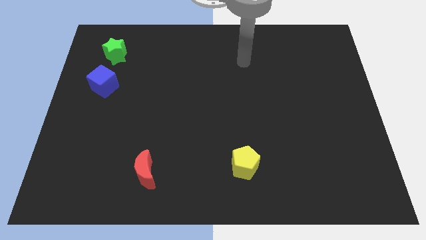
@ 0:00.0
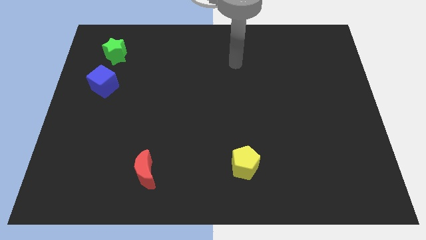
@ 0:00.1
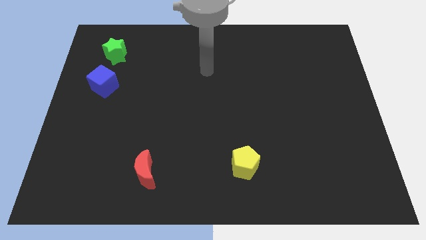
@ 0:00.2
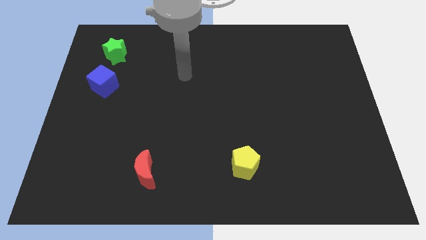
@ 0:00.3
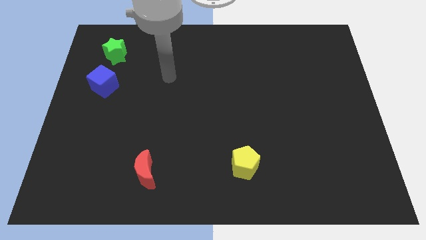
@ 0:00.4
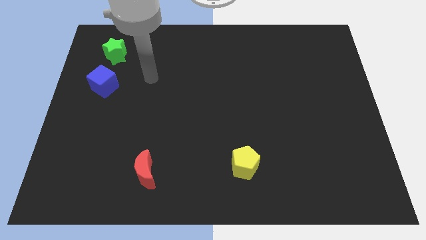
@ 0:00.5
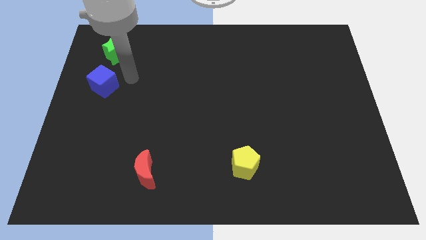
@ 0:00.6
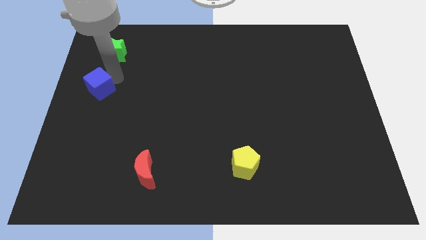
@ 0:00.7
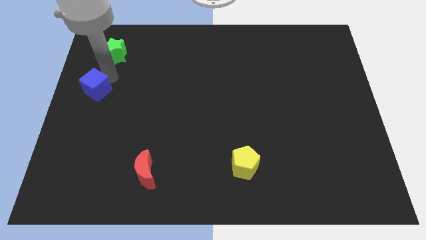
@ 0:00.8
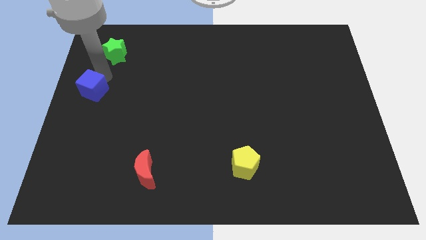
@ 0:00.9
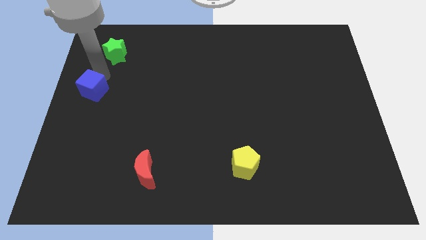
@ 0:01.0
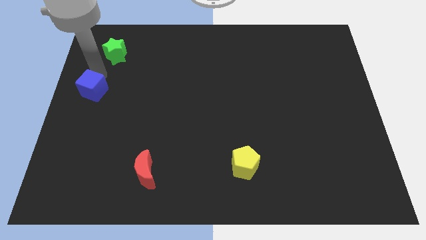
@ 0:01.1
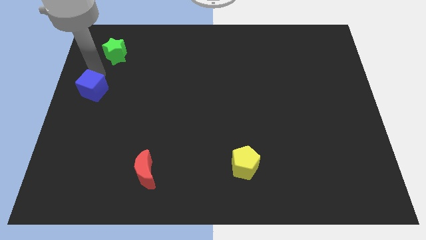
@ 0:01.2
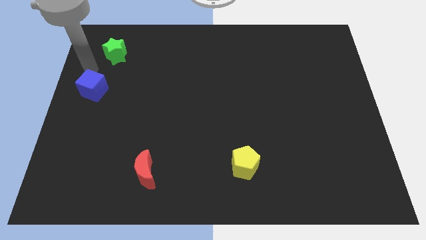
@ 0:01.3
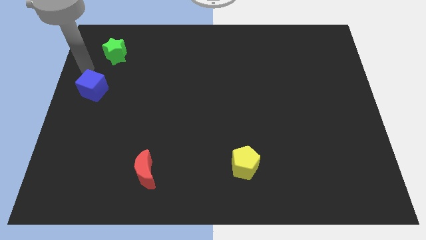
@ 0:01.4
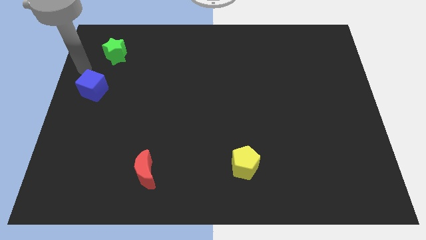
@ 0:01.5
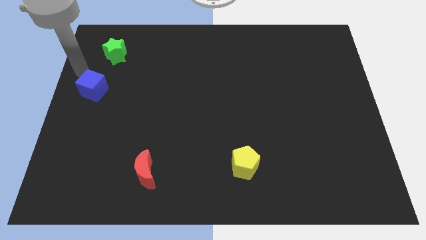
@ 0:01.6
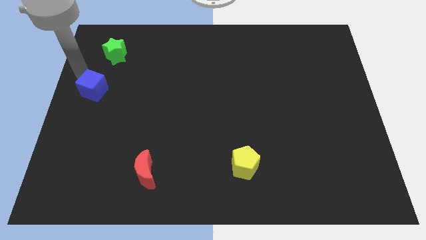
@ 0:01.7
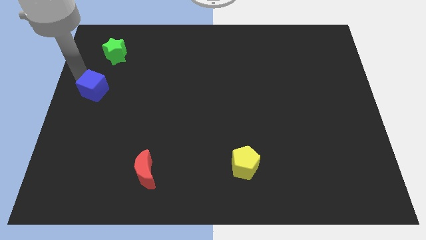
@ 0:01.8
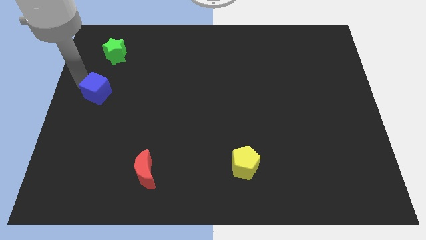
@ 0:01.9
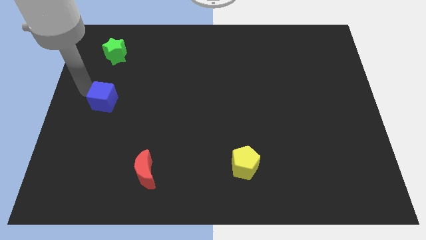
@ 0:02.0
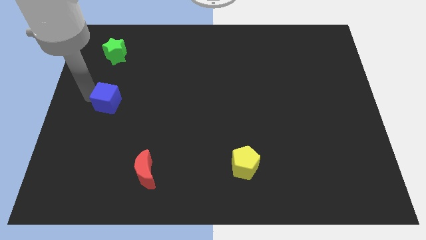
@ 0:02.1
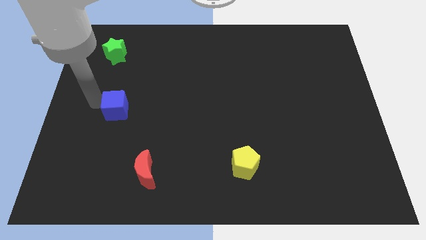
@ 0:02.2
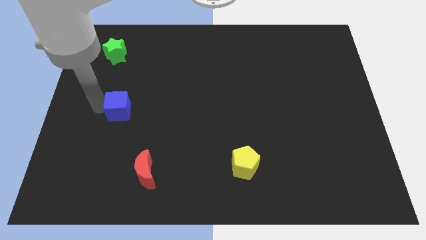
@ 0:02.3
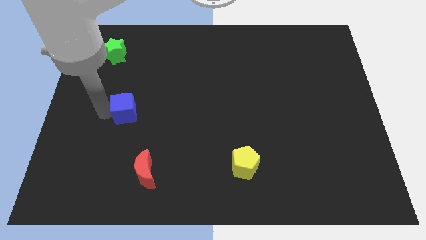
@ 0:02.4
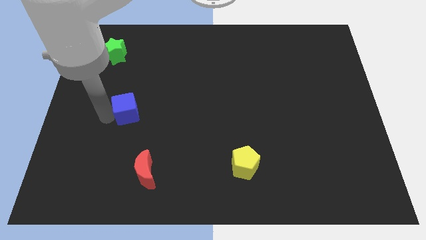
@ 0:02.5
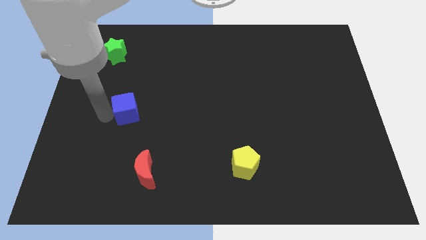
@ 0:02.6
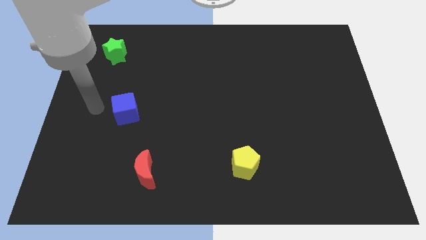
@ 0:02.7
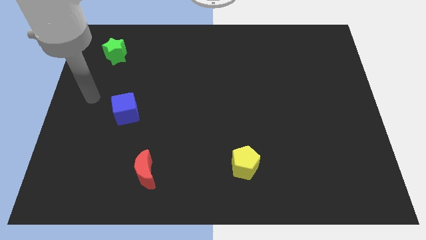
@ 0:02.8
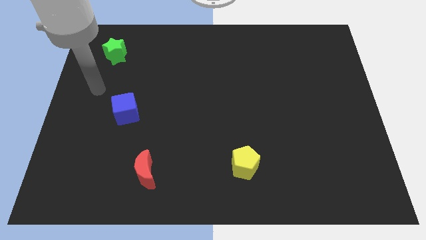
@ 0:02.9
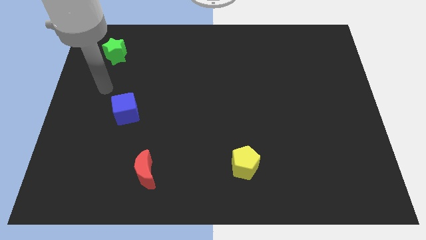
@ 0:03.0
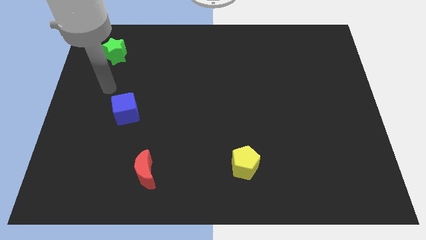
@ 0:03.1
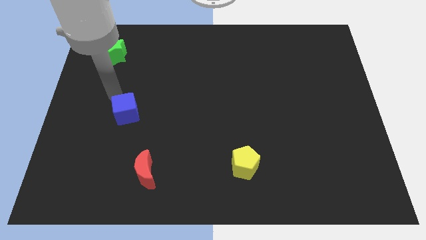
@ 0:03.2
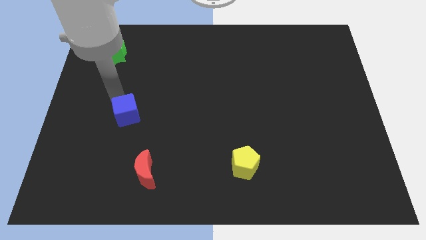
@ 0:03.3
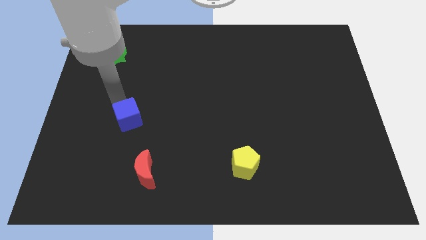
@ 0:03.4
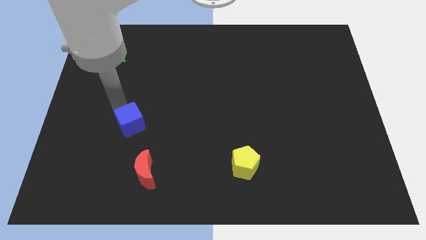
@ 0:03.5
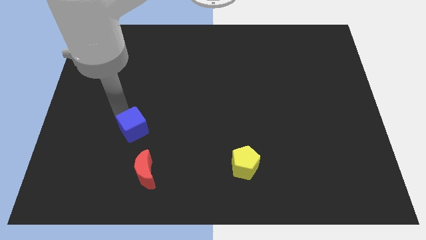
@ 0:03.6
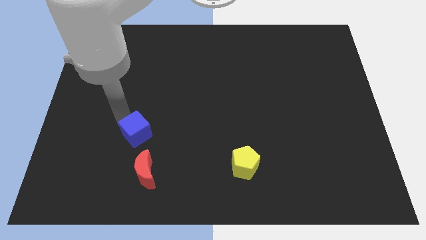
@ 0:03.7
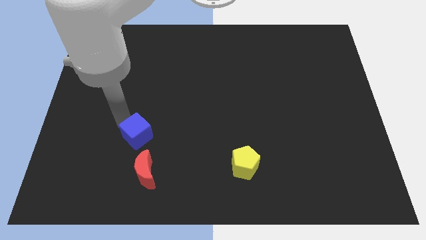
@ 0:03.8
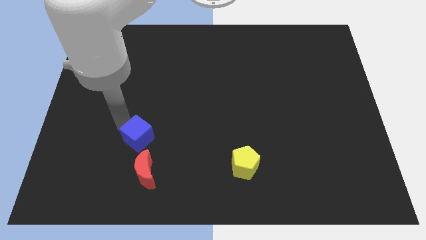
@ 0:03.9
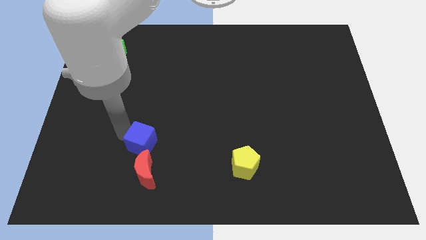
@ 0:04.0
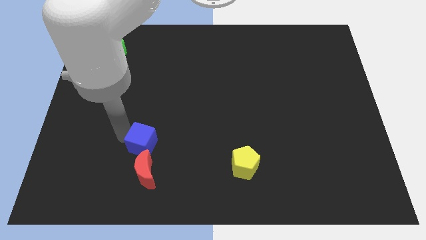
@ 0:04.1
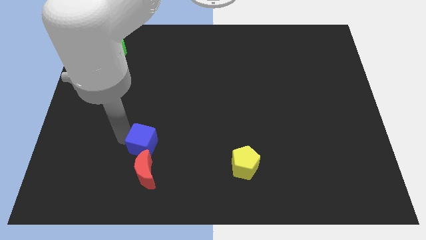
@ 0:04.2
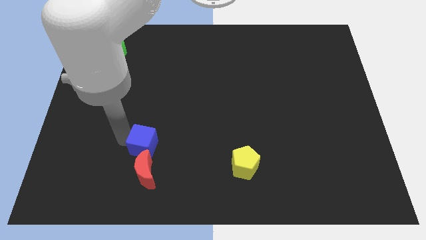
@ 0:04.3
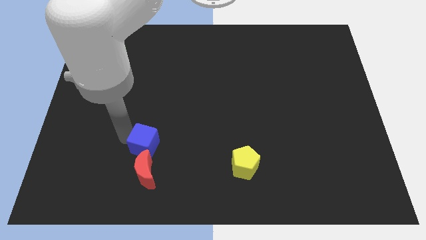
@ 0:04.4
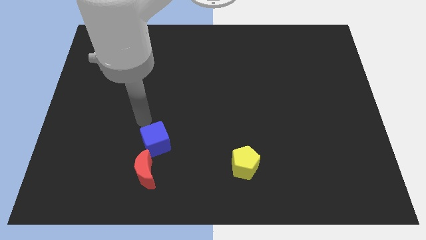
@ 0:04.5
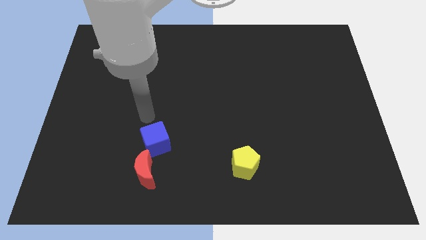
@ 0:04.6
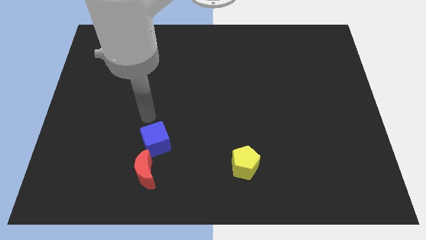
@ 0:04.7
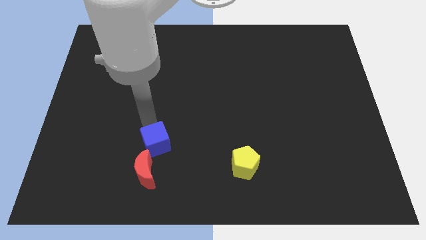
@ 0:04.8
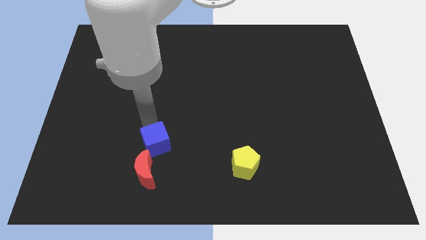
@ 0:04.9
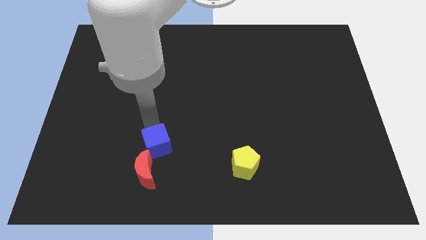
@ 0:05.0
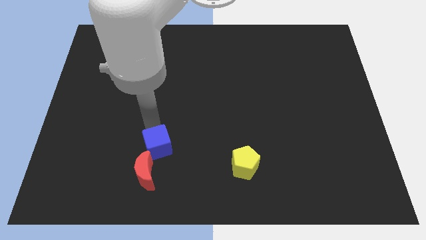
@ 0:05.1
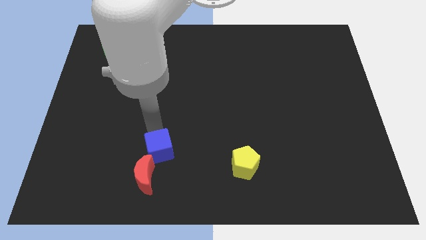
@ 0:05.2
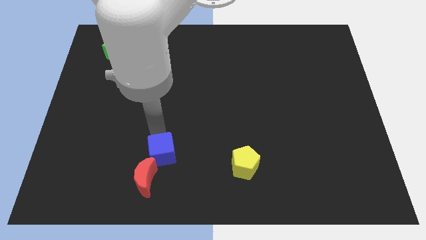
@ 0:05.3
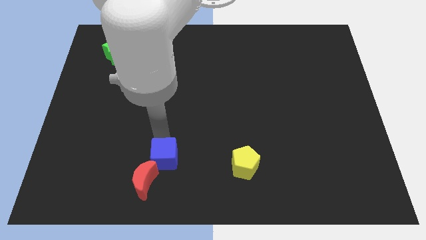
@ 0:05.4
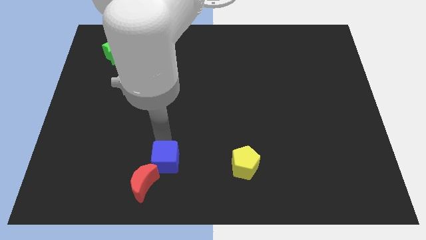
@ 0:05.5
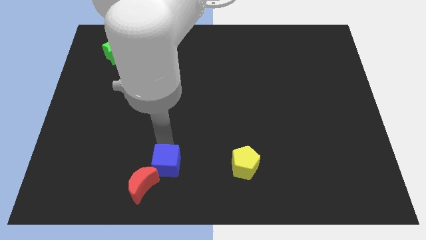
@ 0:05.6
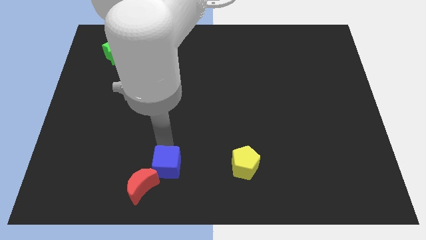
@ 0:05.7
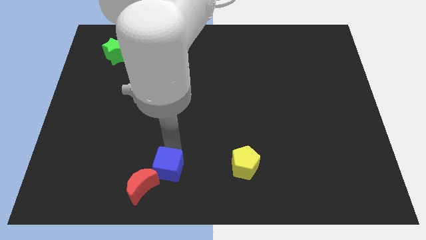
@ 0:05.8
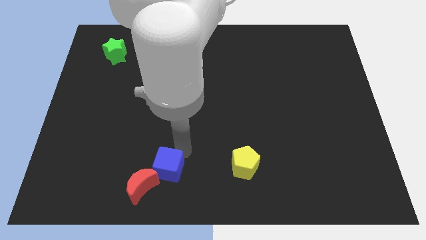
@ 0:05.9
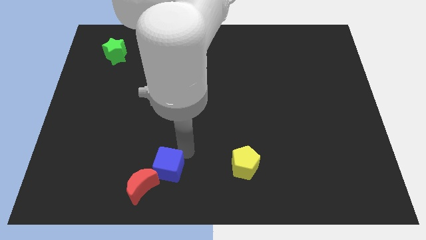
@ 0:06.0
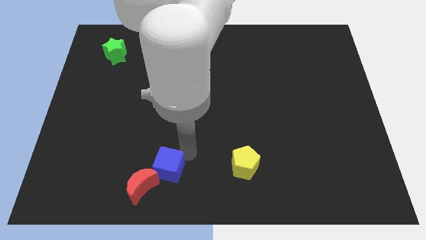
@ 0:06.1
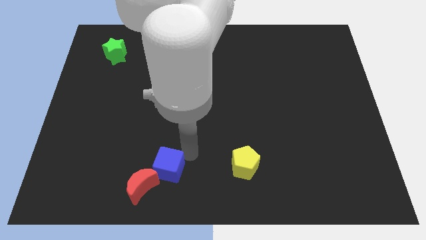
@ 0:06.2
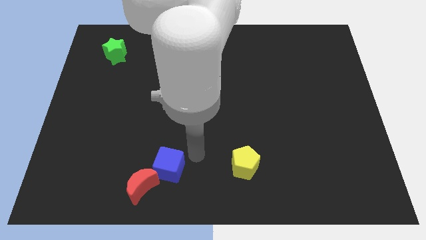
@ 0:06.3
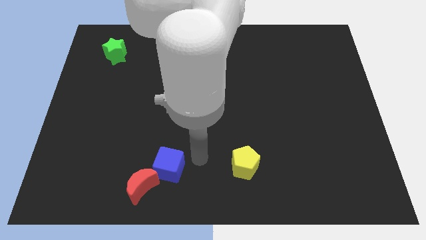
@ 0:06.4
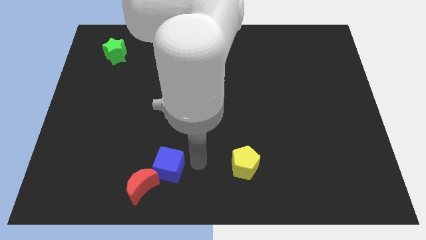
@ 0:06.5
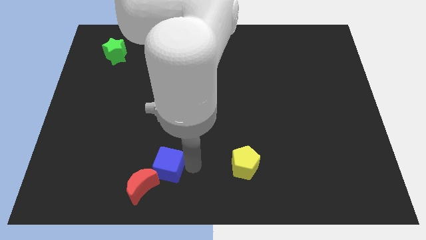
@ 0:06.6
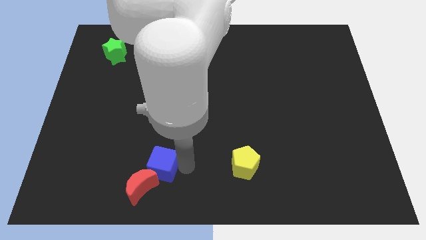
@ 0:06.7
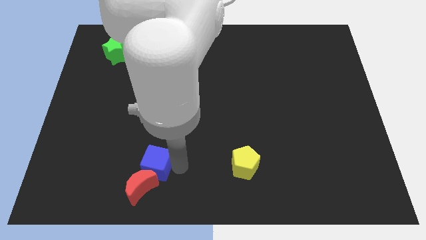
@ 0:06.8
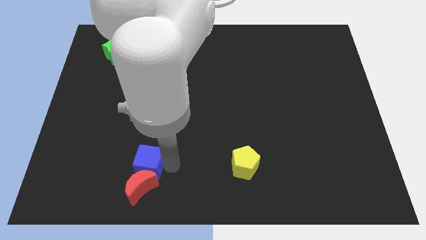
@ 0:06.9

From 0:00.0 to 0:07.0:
put the blue block next to the moon

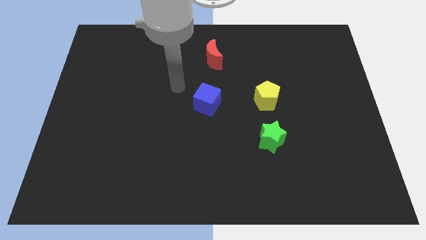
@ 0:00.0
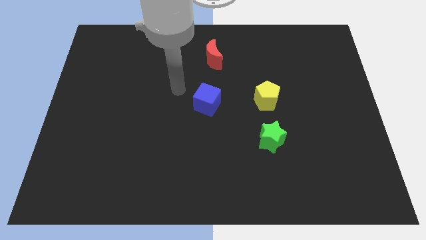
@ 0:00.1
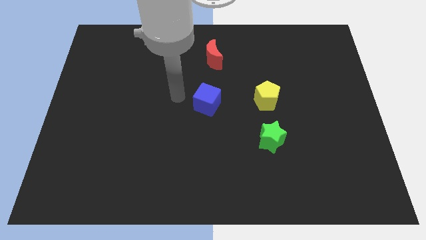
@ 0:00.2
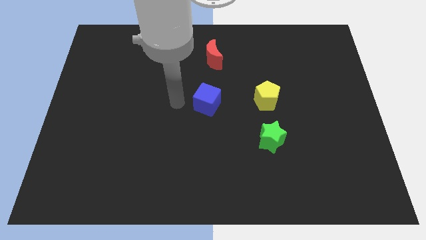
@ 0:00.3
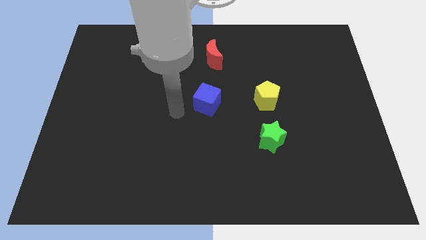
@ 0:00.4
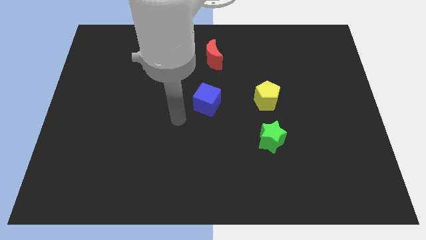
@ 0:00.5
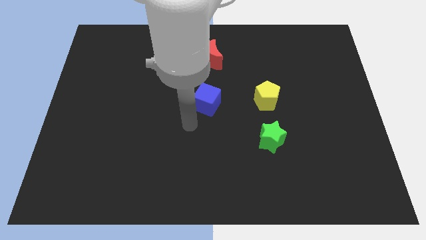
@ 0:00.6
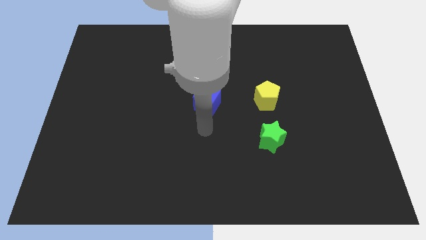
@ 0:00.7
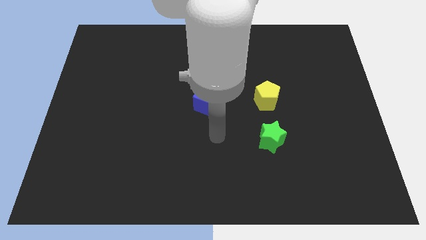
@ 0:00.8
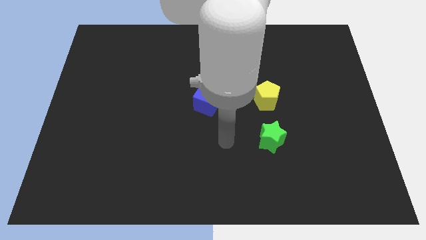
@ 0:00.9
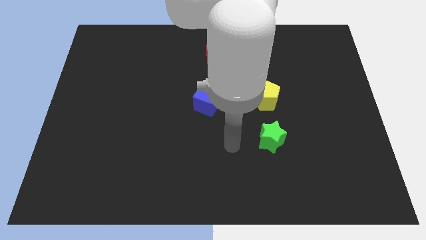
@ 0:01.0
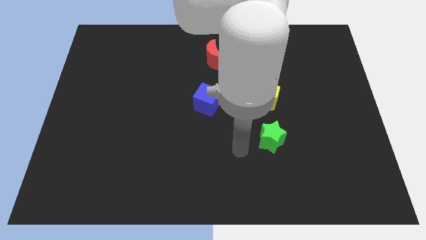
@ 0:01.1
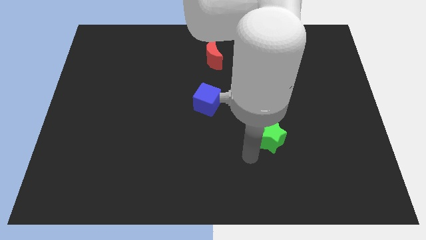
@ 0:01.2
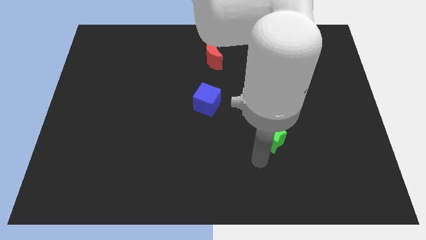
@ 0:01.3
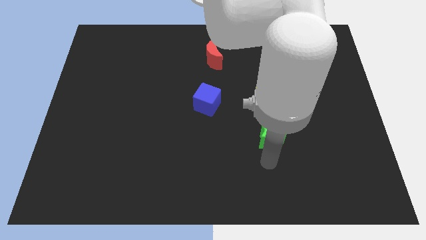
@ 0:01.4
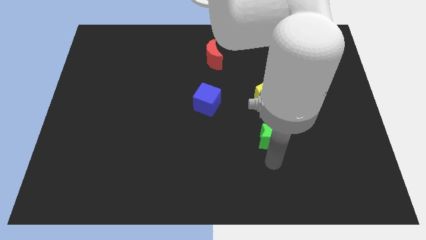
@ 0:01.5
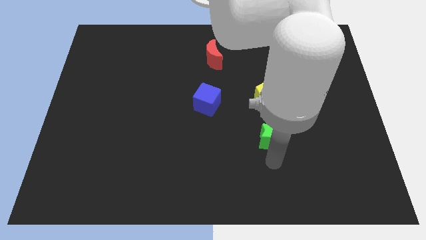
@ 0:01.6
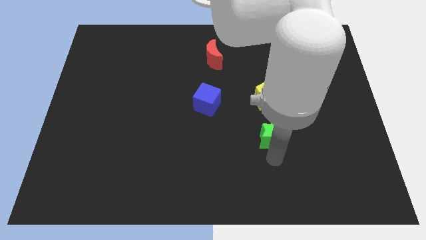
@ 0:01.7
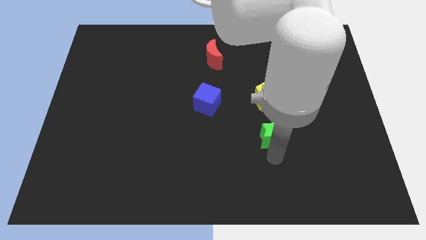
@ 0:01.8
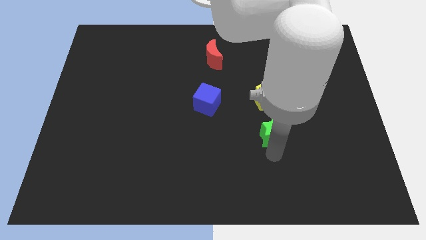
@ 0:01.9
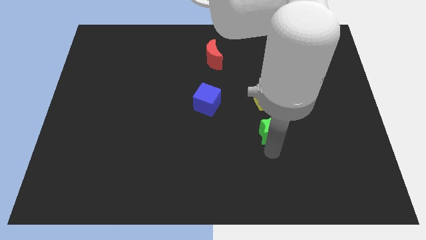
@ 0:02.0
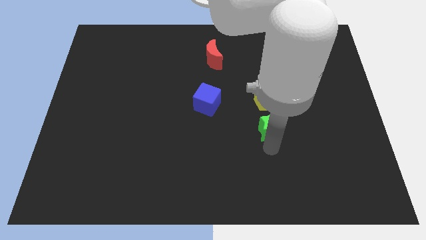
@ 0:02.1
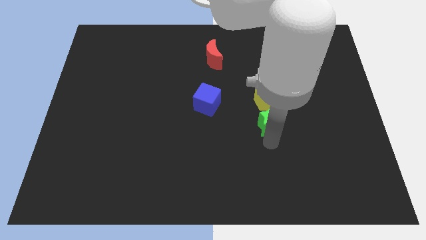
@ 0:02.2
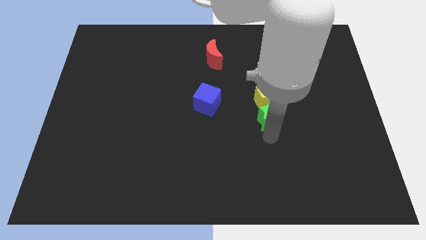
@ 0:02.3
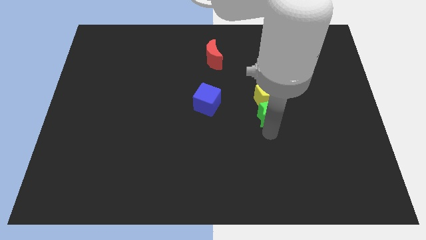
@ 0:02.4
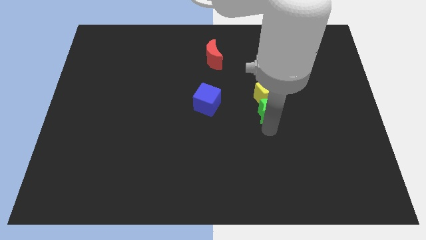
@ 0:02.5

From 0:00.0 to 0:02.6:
push the star close to the pentagon
